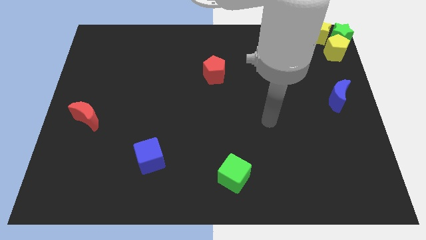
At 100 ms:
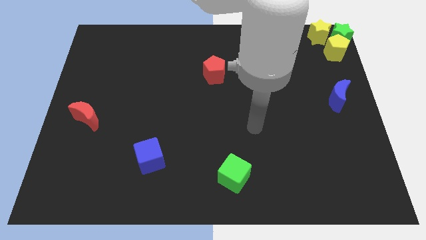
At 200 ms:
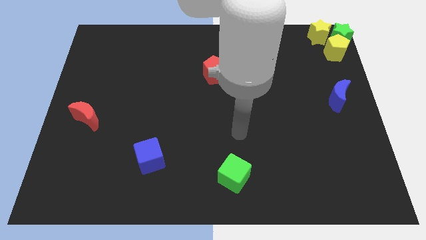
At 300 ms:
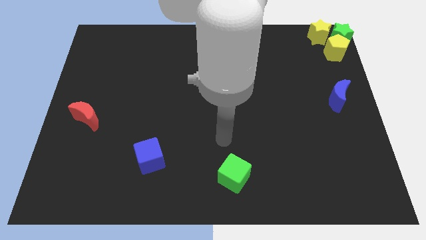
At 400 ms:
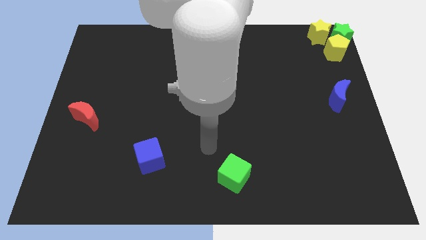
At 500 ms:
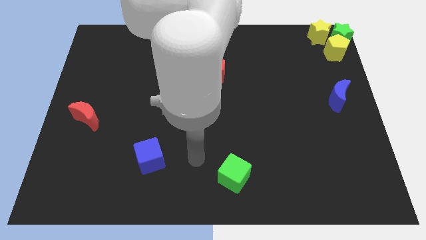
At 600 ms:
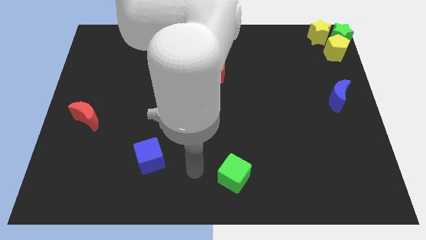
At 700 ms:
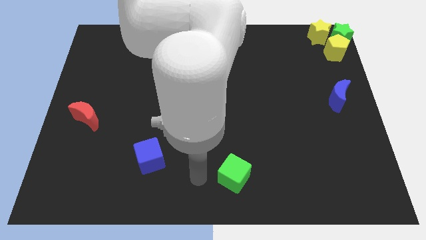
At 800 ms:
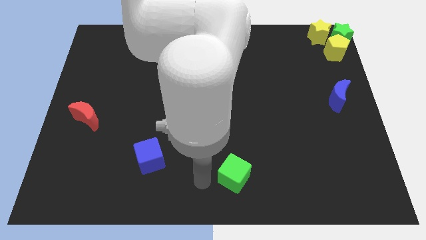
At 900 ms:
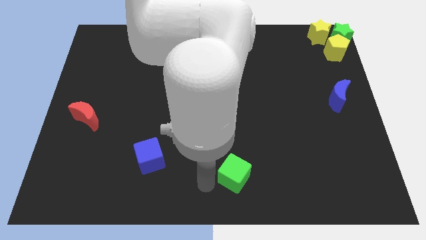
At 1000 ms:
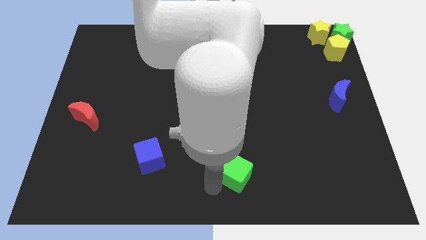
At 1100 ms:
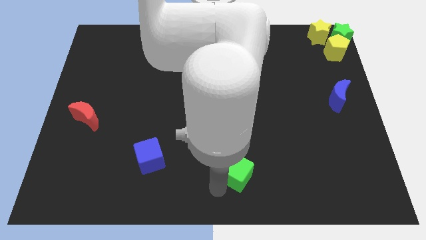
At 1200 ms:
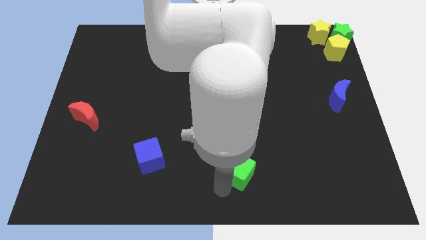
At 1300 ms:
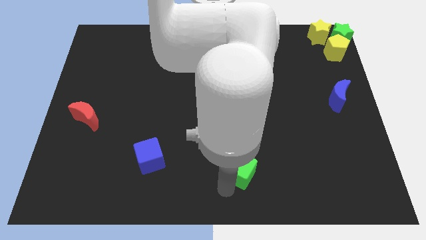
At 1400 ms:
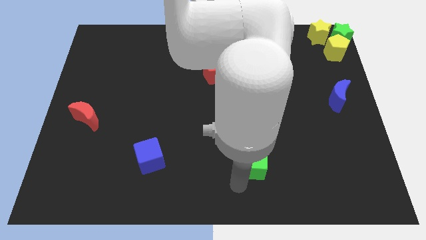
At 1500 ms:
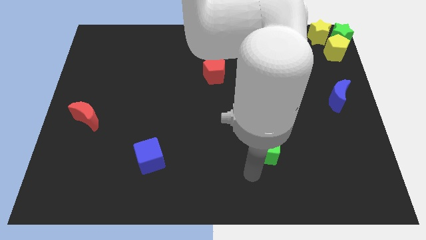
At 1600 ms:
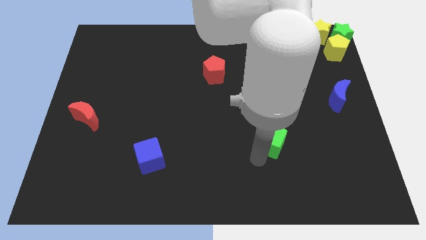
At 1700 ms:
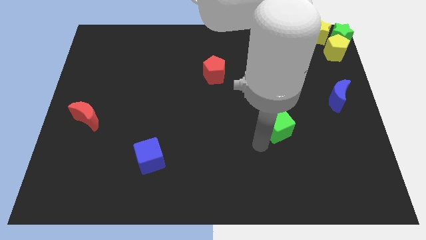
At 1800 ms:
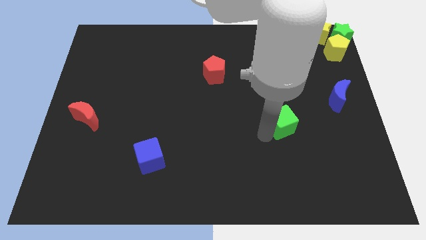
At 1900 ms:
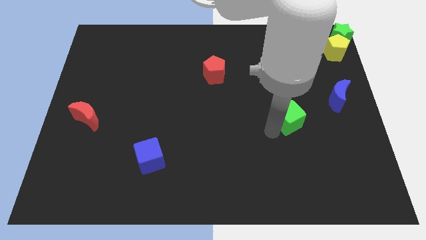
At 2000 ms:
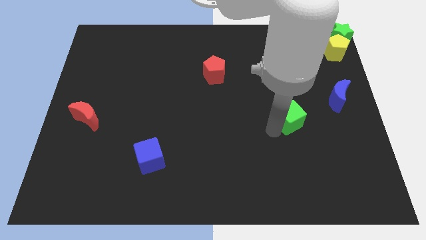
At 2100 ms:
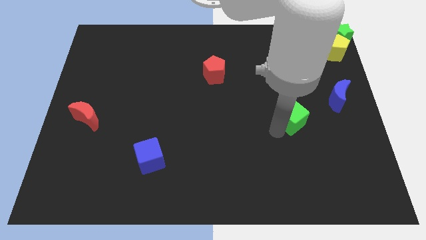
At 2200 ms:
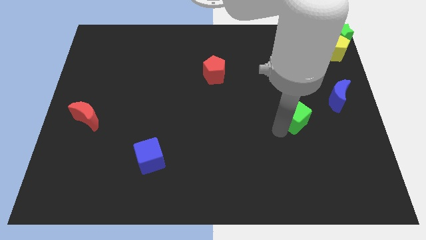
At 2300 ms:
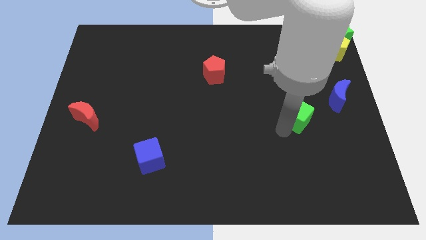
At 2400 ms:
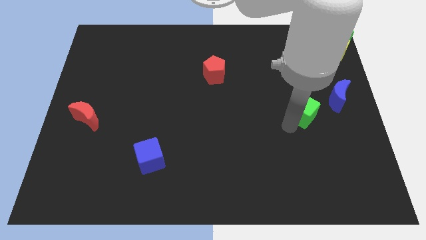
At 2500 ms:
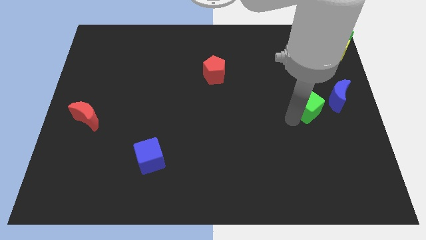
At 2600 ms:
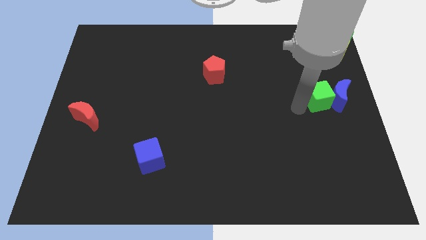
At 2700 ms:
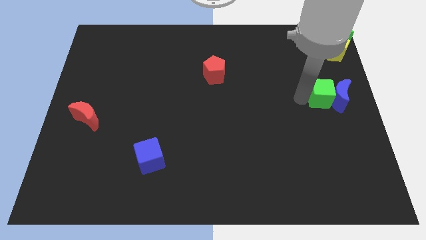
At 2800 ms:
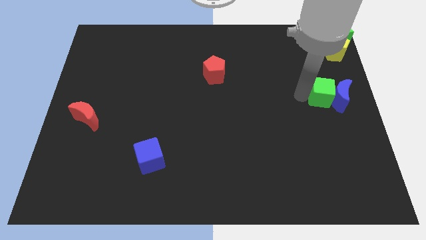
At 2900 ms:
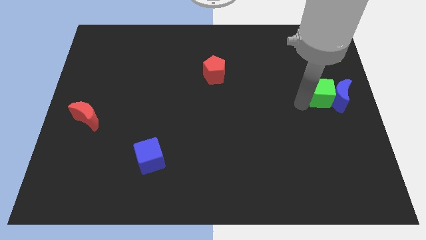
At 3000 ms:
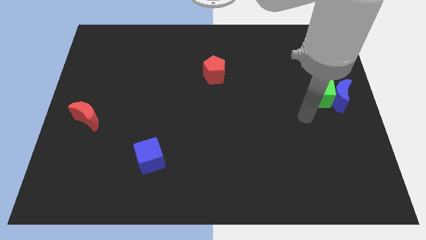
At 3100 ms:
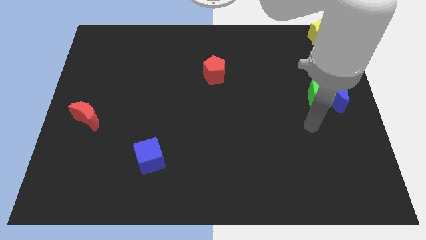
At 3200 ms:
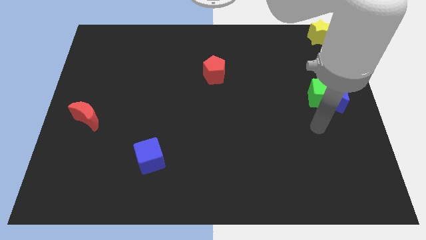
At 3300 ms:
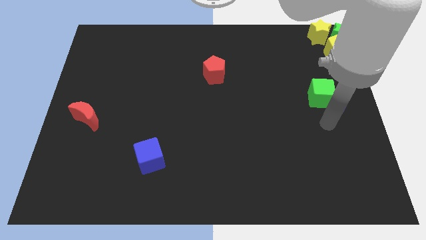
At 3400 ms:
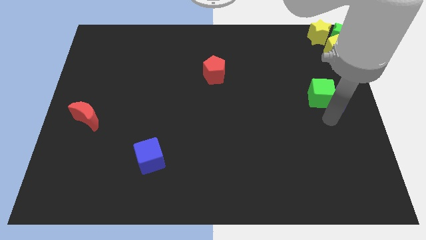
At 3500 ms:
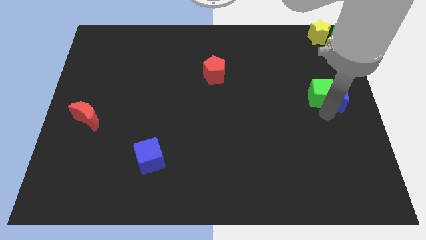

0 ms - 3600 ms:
push the green cube to the left of the blue crescent

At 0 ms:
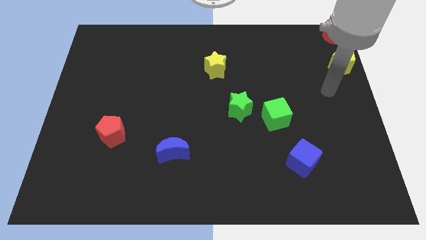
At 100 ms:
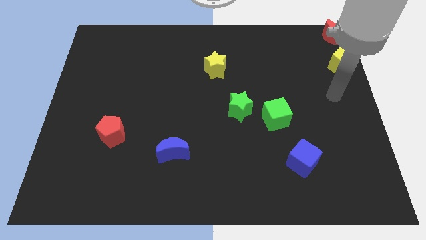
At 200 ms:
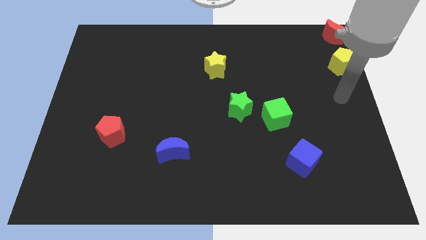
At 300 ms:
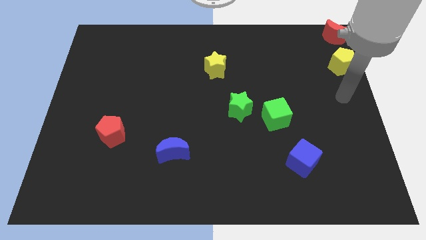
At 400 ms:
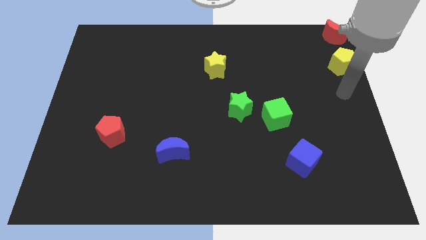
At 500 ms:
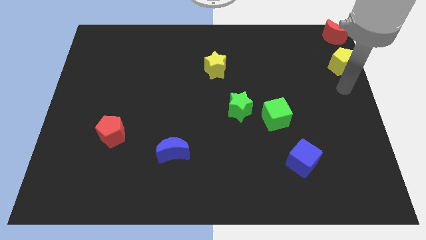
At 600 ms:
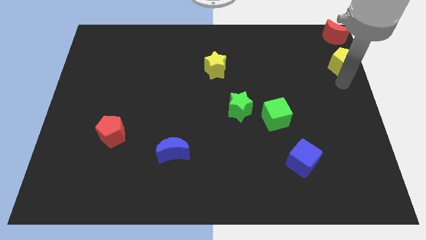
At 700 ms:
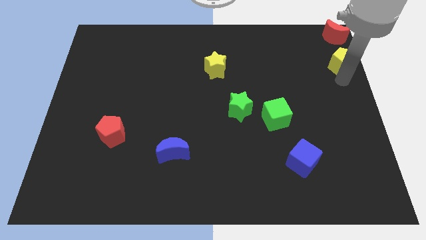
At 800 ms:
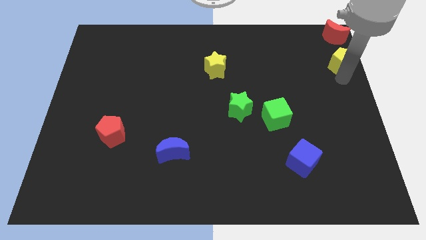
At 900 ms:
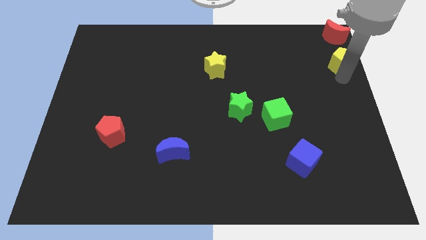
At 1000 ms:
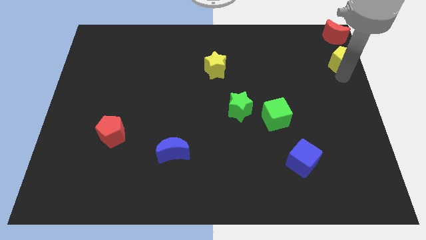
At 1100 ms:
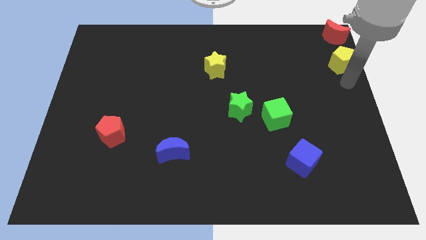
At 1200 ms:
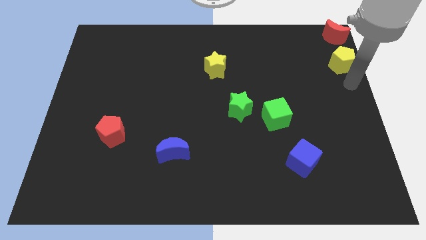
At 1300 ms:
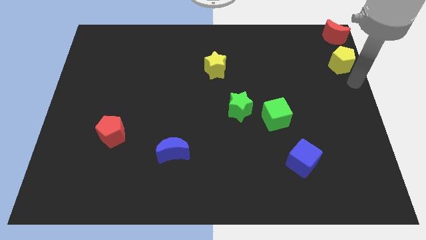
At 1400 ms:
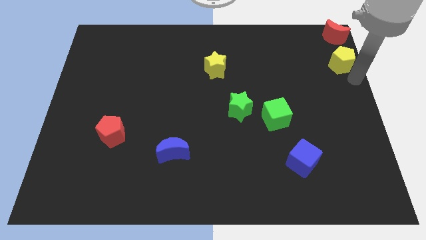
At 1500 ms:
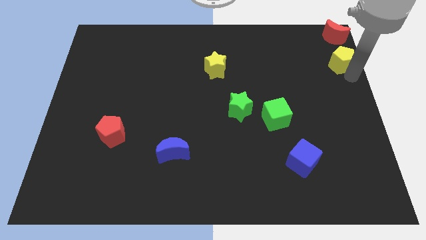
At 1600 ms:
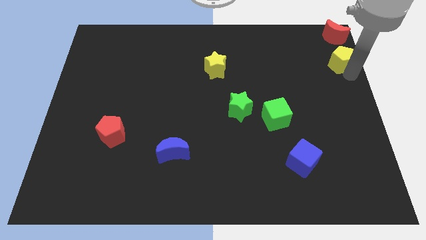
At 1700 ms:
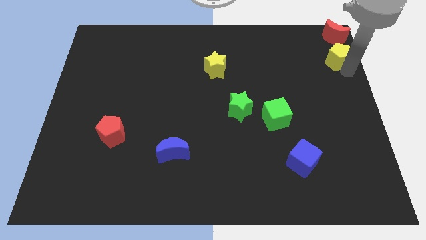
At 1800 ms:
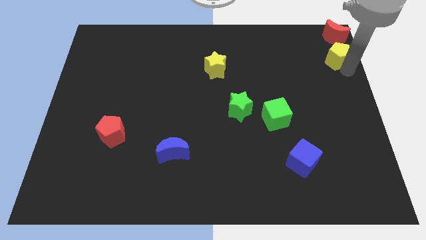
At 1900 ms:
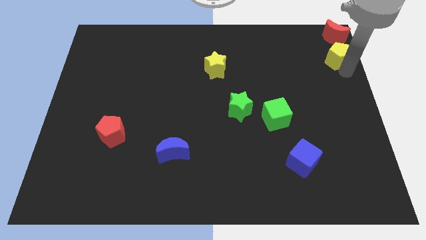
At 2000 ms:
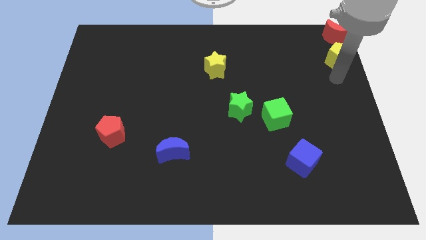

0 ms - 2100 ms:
place yellow pentagon below red moon

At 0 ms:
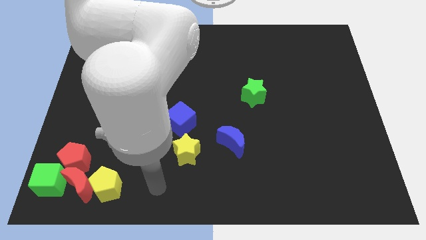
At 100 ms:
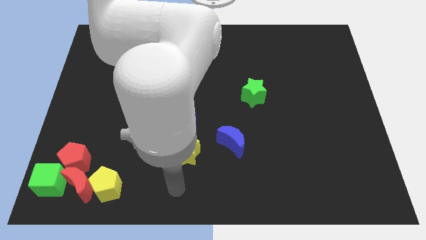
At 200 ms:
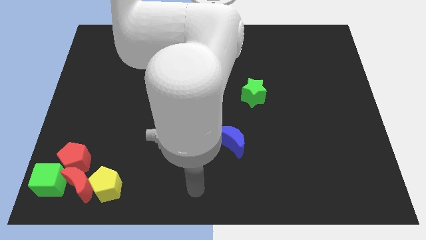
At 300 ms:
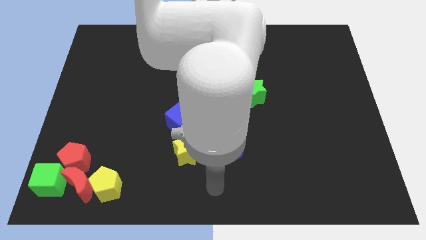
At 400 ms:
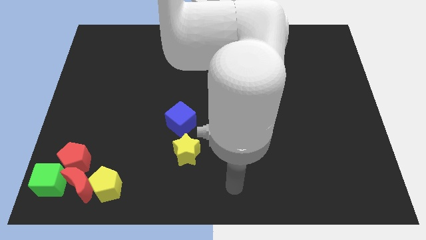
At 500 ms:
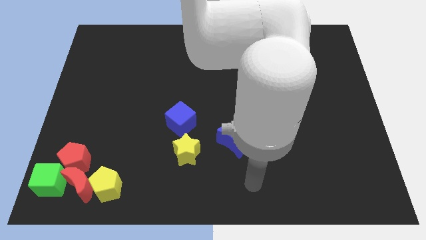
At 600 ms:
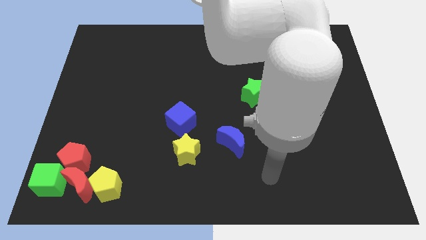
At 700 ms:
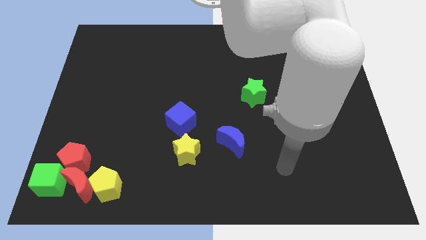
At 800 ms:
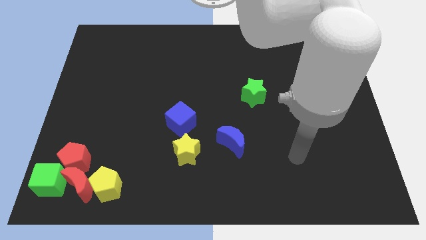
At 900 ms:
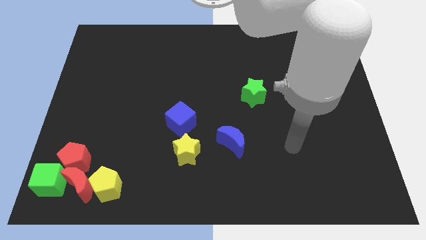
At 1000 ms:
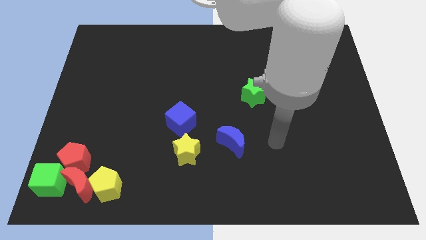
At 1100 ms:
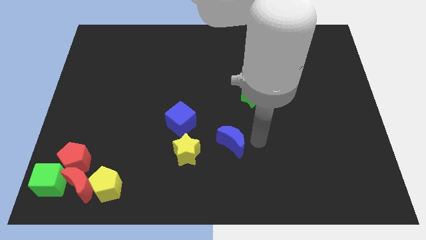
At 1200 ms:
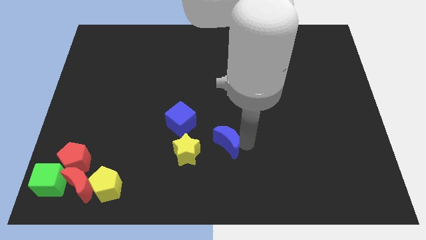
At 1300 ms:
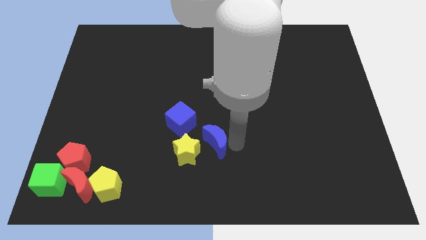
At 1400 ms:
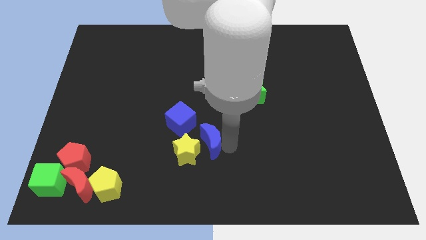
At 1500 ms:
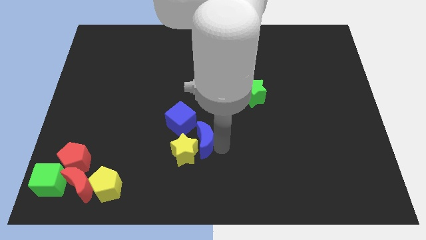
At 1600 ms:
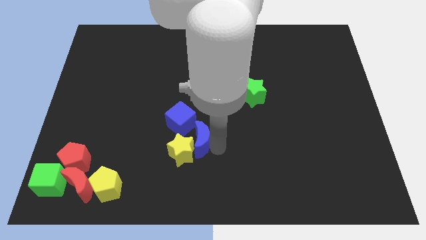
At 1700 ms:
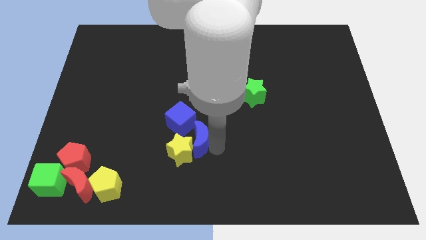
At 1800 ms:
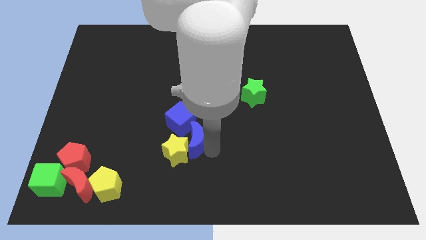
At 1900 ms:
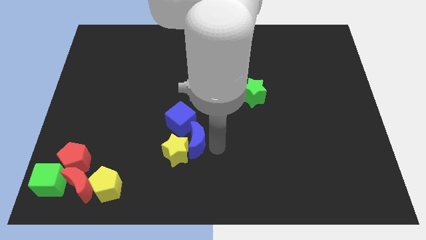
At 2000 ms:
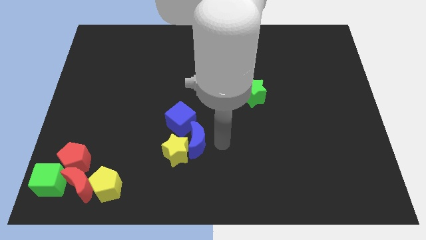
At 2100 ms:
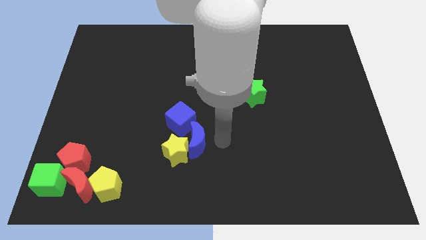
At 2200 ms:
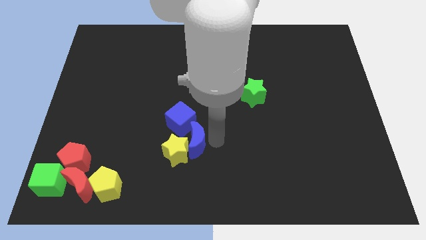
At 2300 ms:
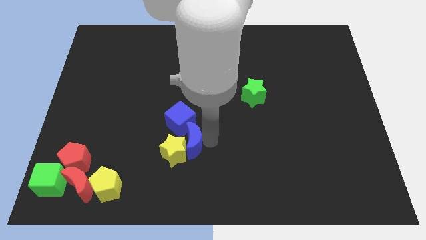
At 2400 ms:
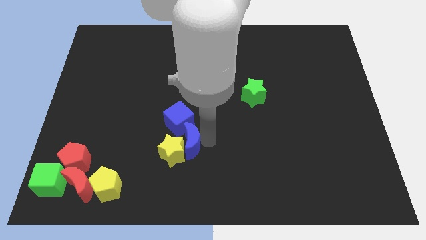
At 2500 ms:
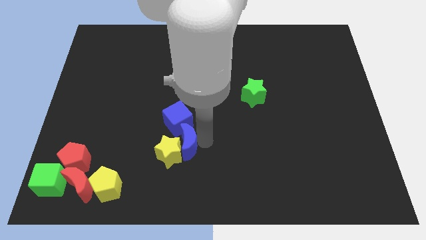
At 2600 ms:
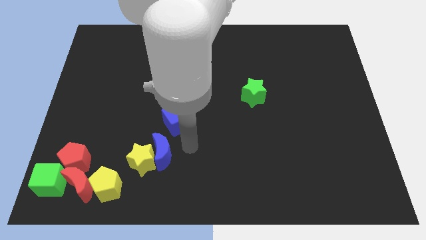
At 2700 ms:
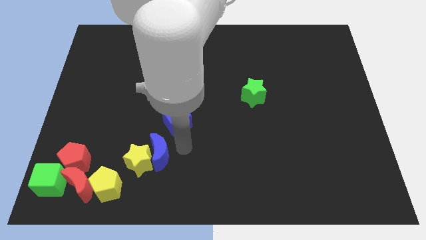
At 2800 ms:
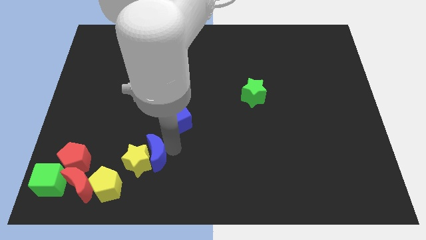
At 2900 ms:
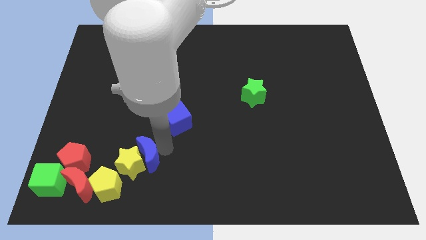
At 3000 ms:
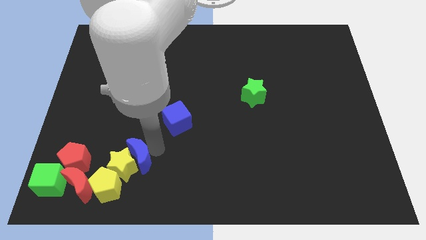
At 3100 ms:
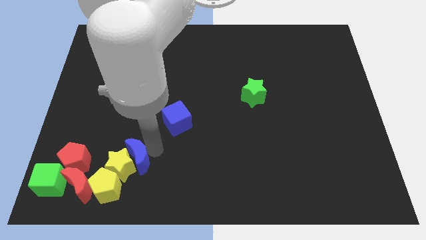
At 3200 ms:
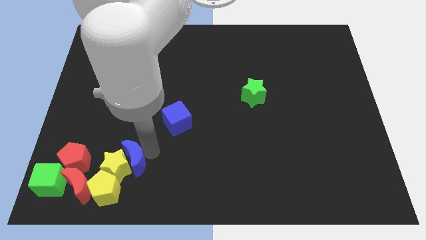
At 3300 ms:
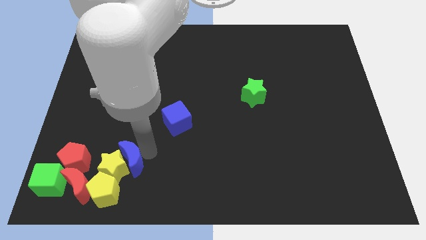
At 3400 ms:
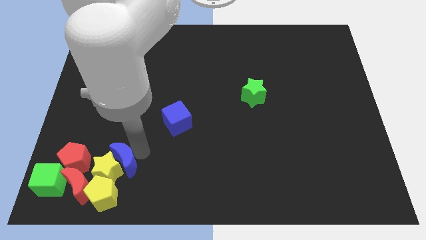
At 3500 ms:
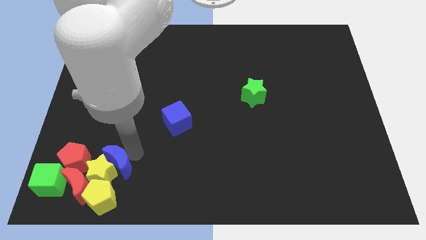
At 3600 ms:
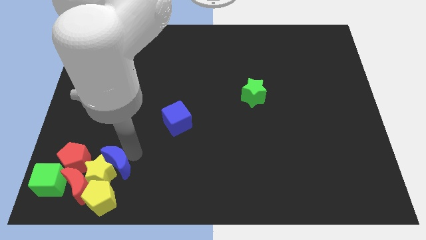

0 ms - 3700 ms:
push the blue moon and the yellow star into the group of blocks
